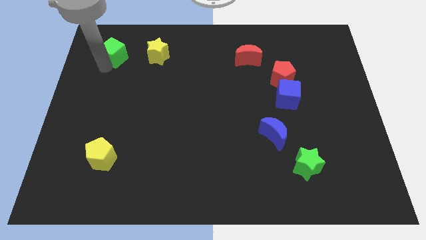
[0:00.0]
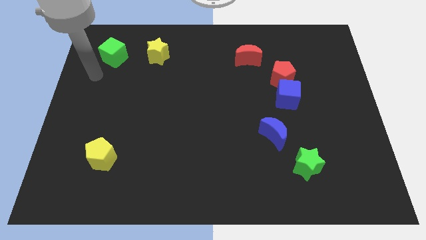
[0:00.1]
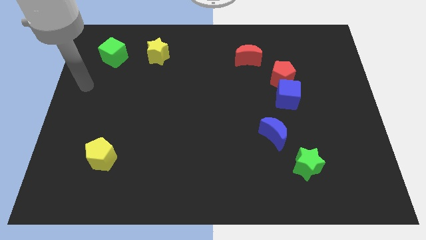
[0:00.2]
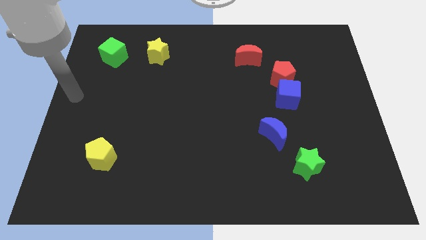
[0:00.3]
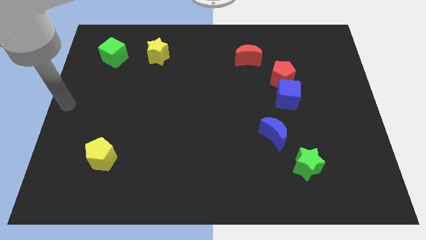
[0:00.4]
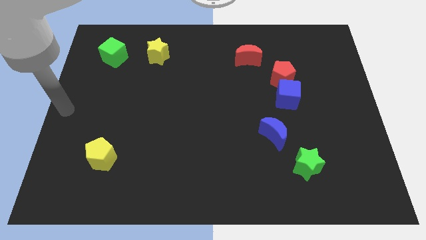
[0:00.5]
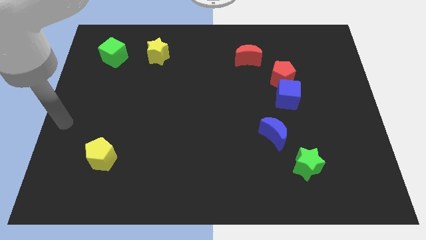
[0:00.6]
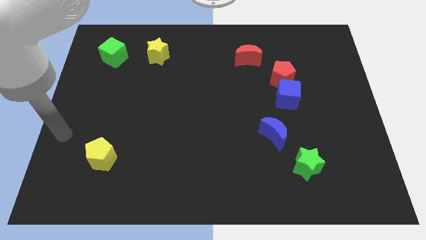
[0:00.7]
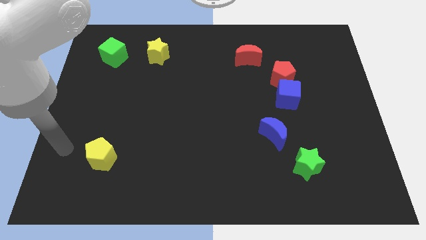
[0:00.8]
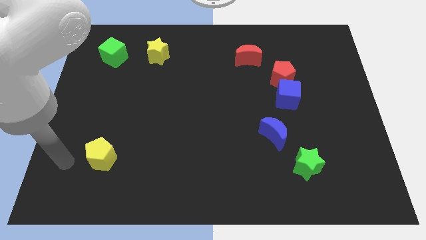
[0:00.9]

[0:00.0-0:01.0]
move the arm away from the green cube

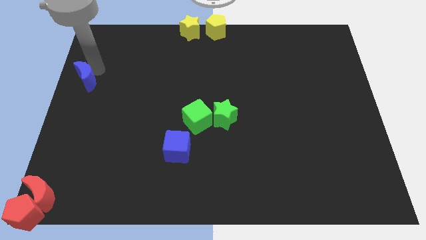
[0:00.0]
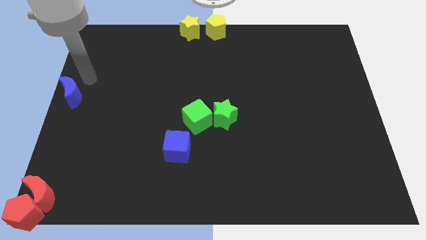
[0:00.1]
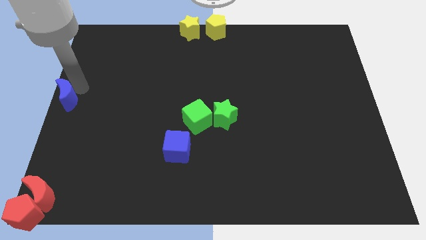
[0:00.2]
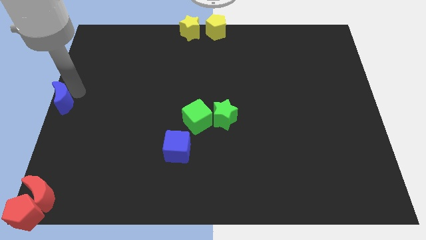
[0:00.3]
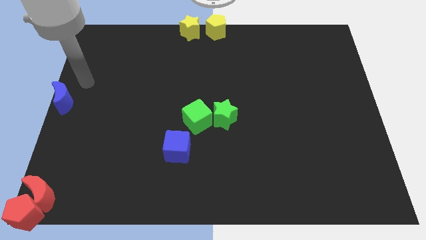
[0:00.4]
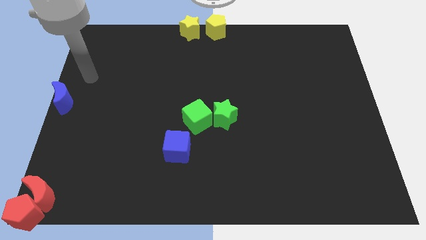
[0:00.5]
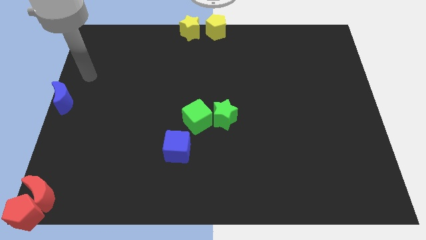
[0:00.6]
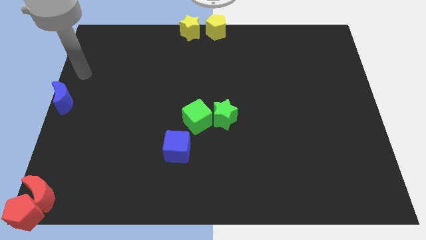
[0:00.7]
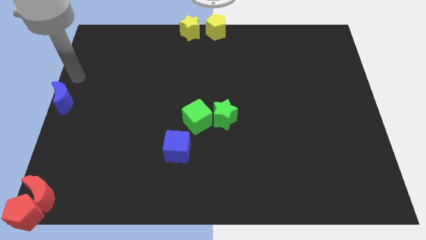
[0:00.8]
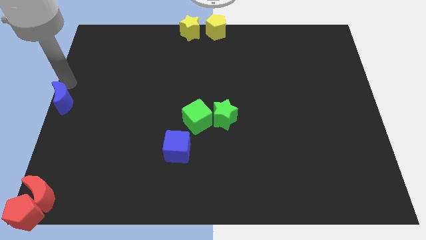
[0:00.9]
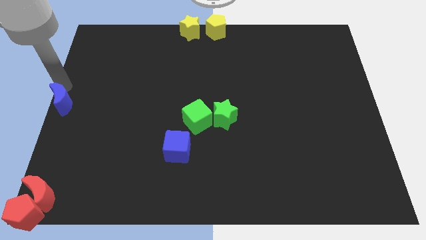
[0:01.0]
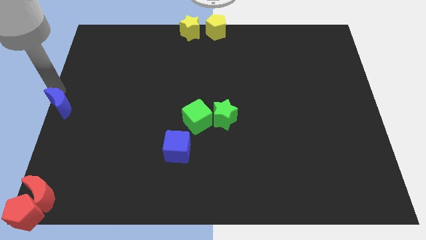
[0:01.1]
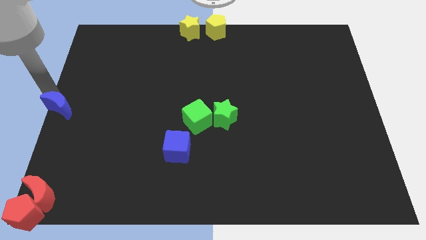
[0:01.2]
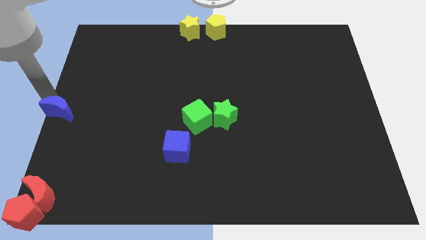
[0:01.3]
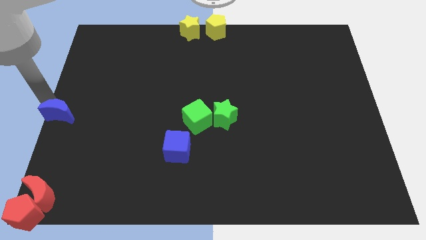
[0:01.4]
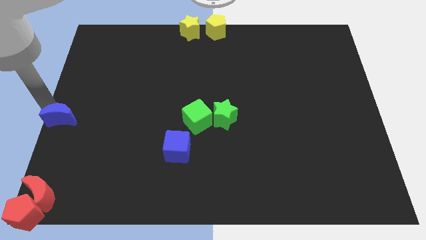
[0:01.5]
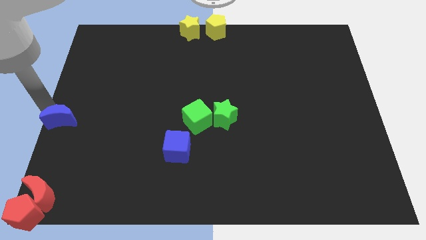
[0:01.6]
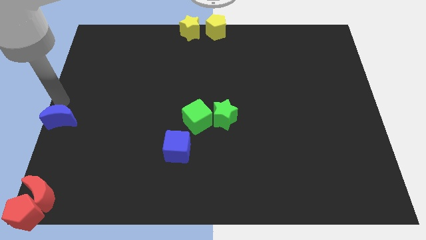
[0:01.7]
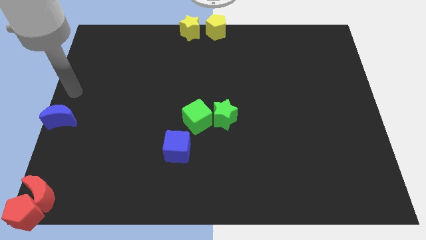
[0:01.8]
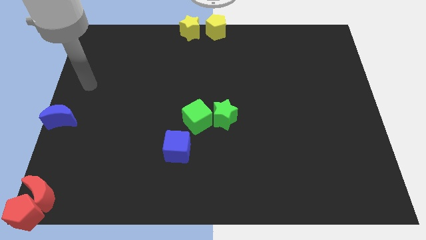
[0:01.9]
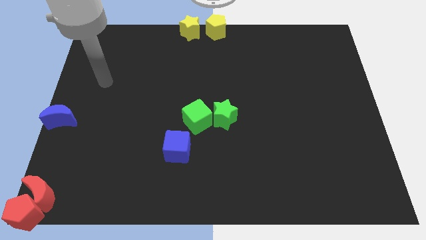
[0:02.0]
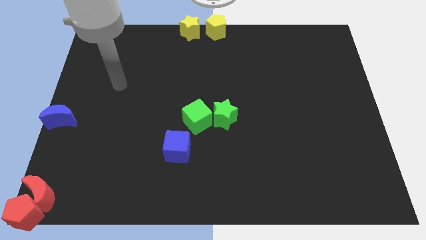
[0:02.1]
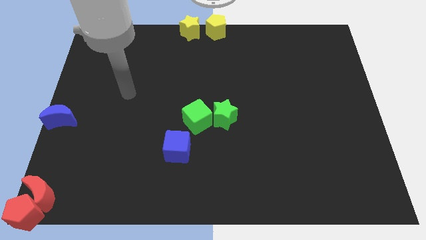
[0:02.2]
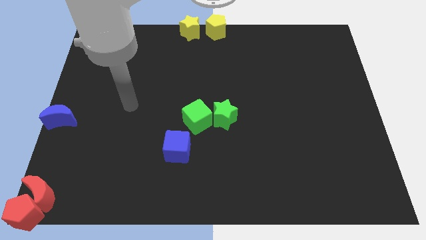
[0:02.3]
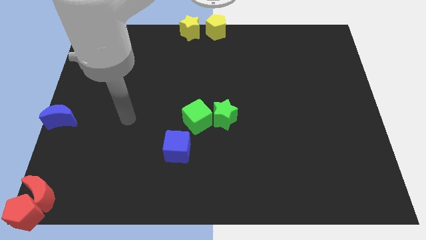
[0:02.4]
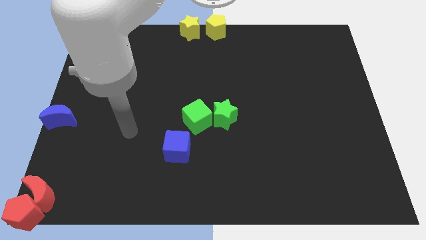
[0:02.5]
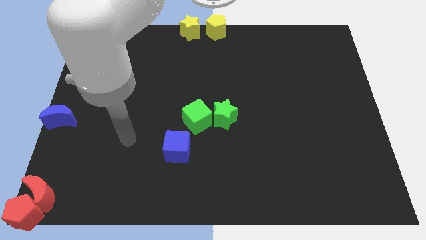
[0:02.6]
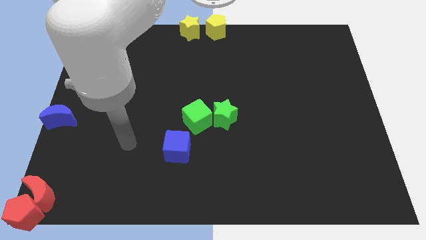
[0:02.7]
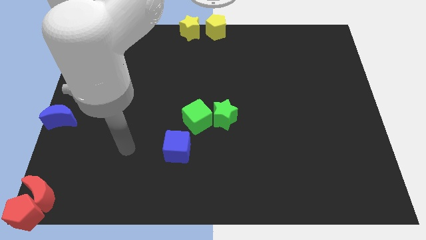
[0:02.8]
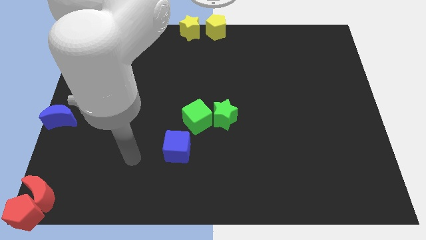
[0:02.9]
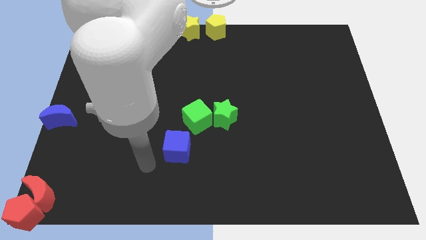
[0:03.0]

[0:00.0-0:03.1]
push the blue moon vertically to the top side of the red moon

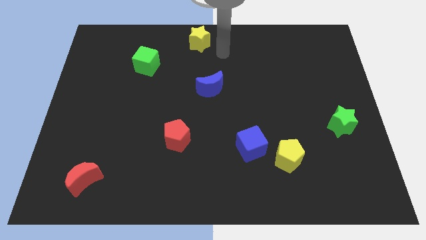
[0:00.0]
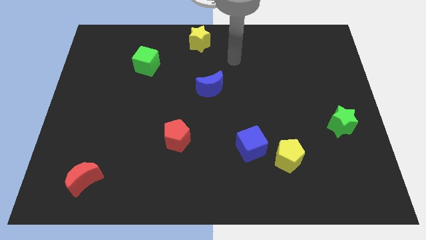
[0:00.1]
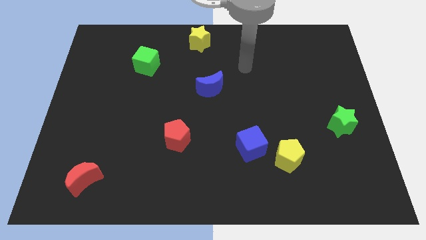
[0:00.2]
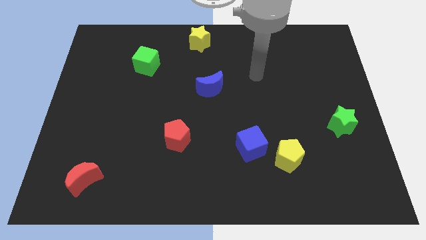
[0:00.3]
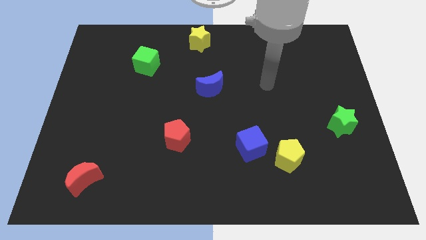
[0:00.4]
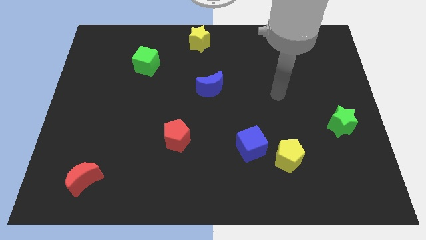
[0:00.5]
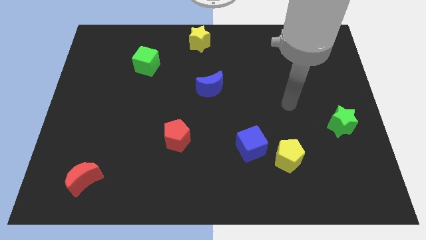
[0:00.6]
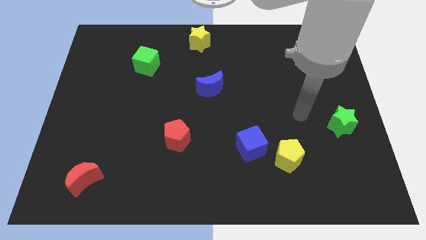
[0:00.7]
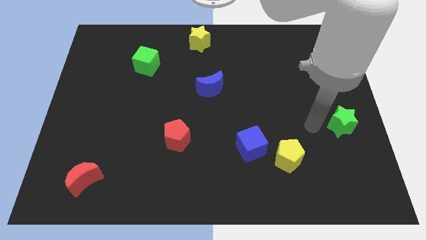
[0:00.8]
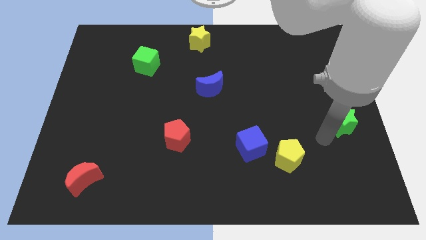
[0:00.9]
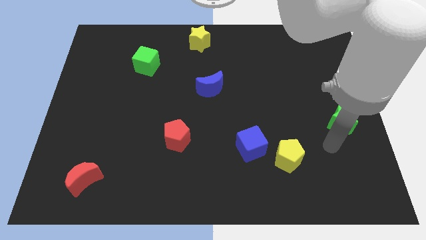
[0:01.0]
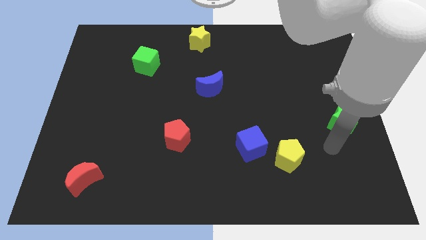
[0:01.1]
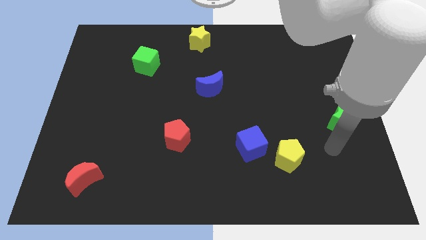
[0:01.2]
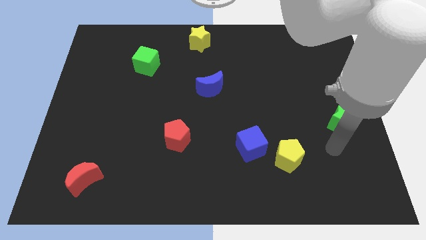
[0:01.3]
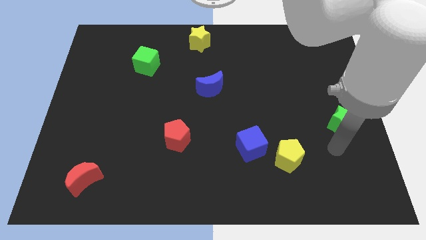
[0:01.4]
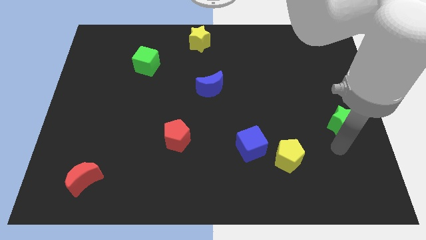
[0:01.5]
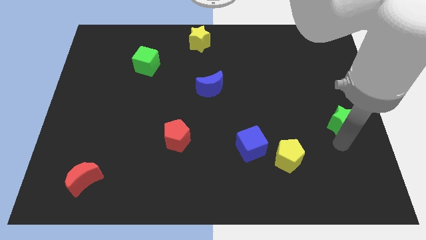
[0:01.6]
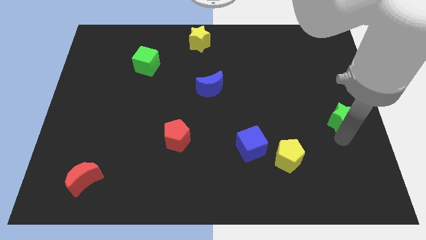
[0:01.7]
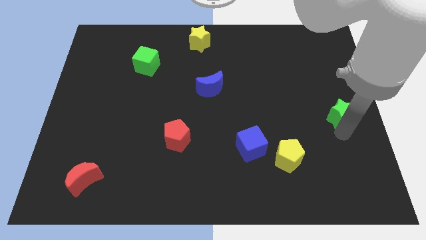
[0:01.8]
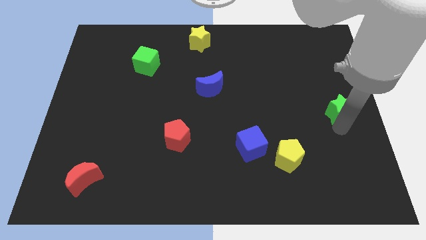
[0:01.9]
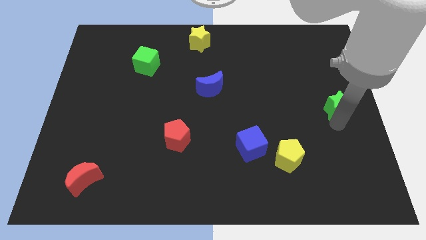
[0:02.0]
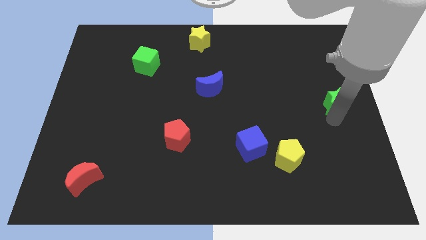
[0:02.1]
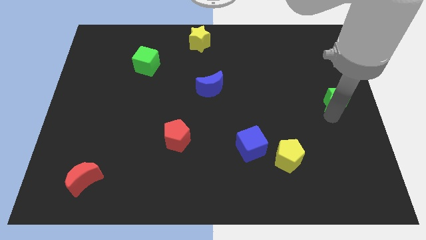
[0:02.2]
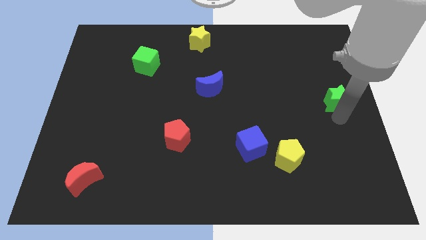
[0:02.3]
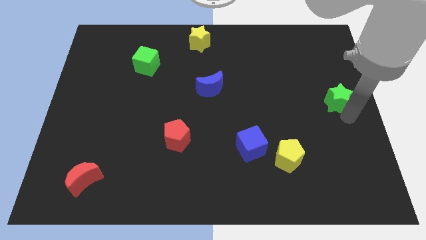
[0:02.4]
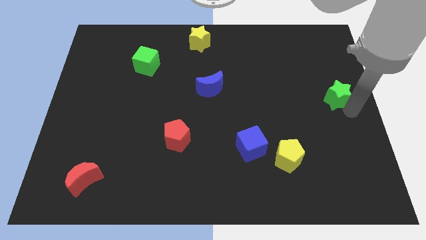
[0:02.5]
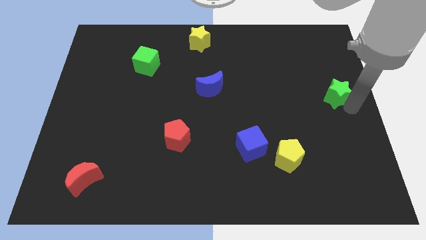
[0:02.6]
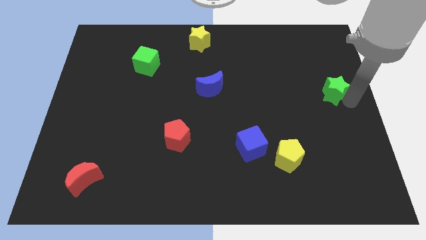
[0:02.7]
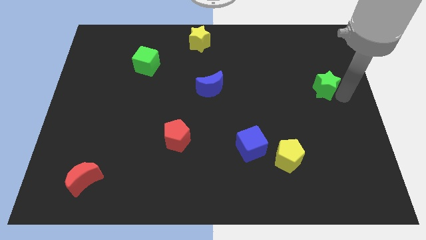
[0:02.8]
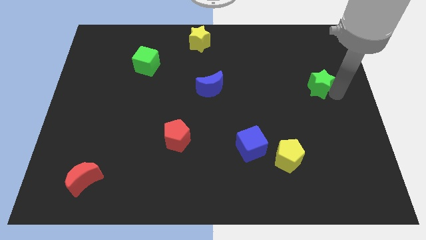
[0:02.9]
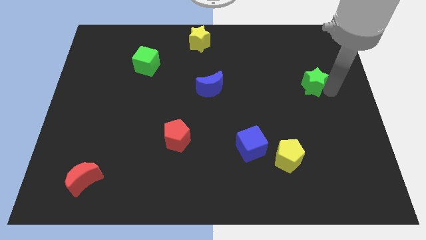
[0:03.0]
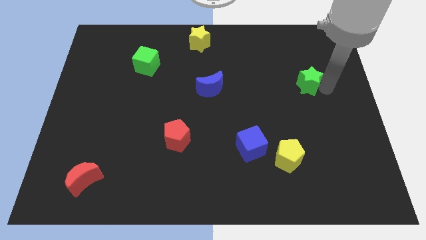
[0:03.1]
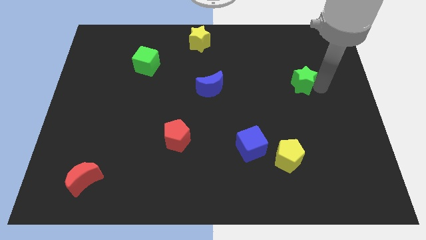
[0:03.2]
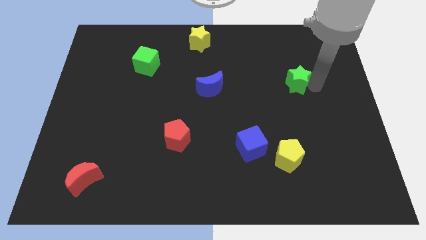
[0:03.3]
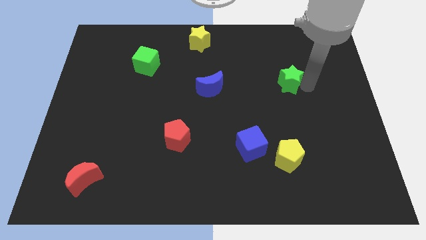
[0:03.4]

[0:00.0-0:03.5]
move the green star towards the top center of the board

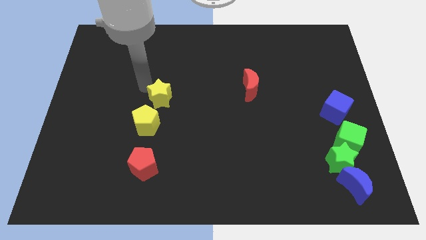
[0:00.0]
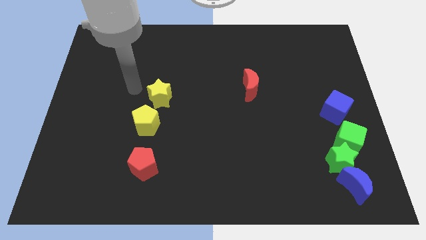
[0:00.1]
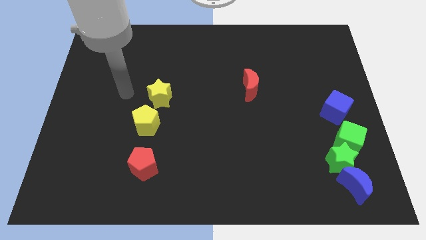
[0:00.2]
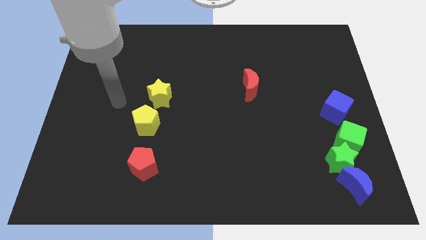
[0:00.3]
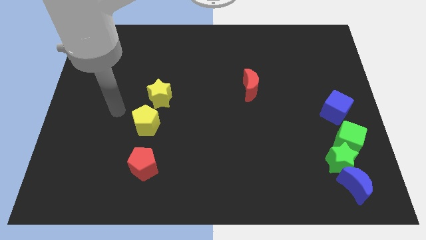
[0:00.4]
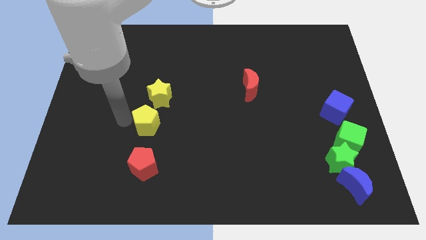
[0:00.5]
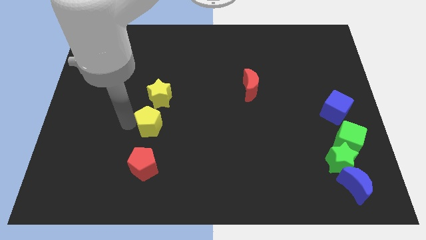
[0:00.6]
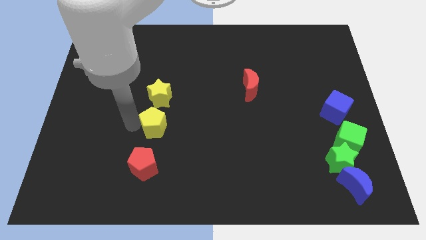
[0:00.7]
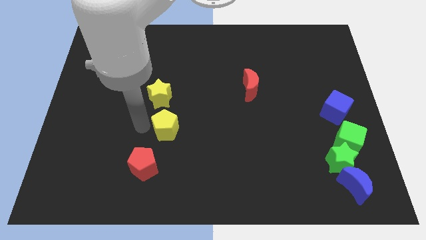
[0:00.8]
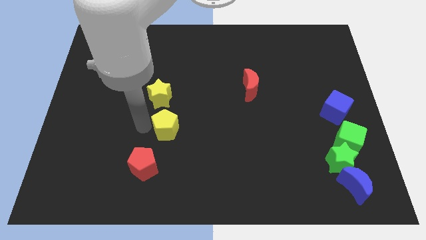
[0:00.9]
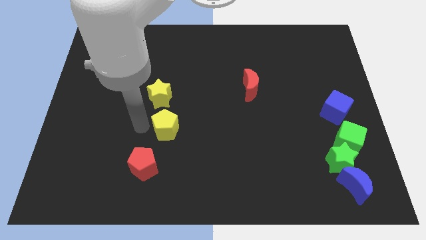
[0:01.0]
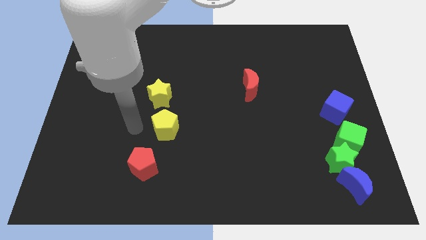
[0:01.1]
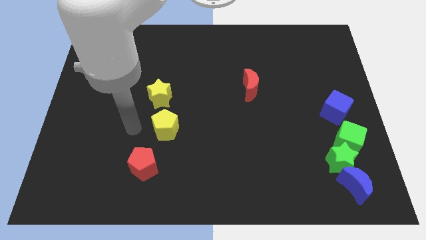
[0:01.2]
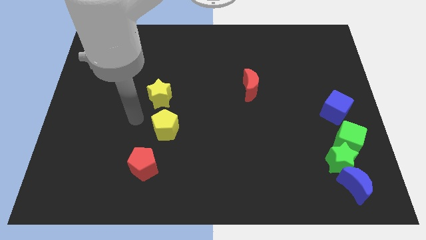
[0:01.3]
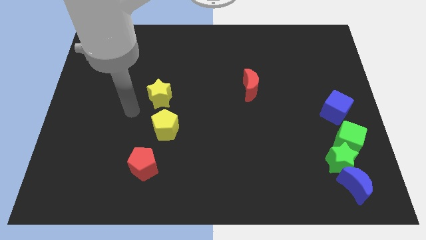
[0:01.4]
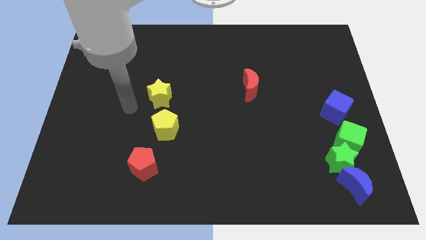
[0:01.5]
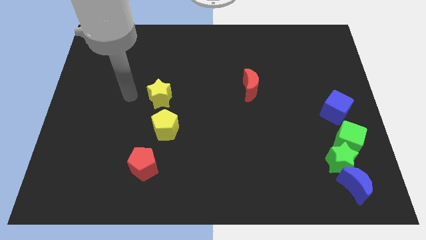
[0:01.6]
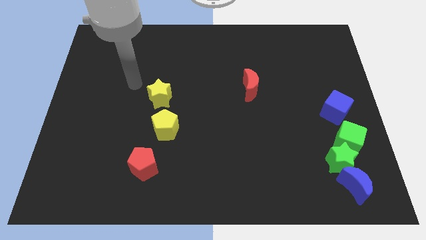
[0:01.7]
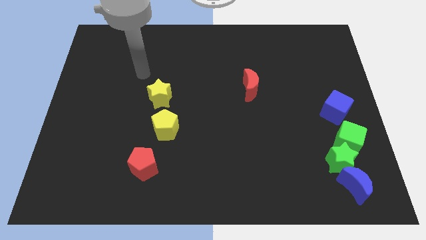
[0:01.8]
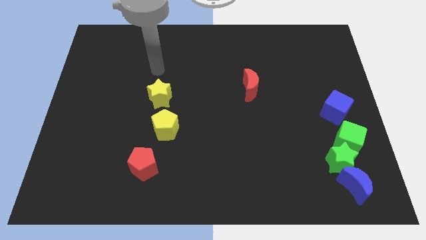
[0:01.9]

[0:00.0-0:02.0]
put the yellow pentagon below the yellow star
